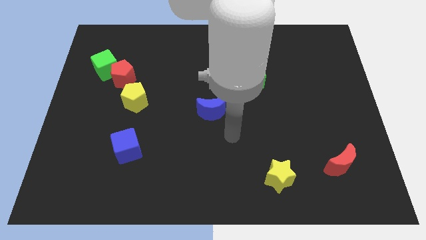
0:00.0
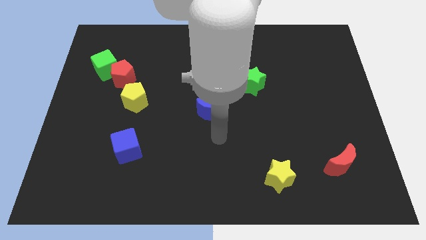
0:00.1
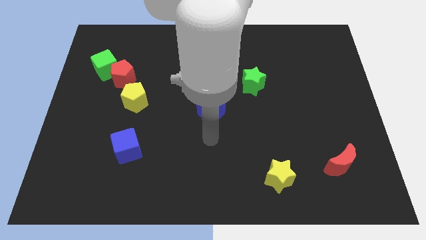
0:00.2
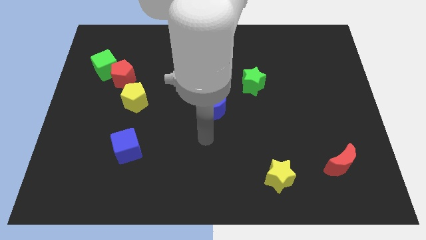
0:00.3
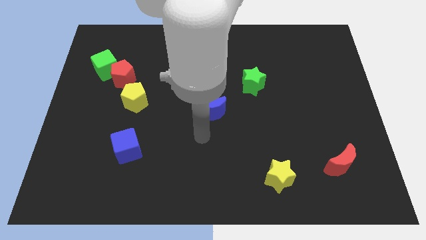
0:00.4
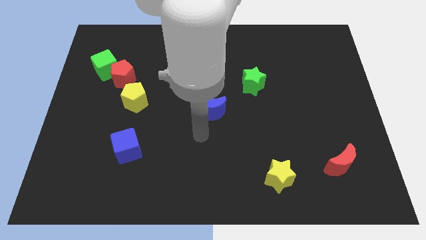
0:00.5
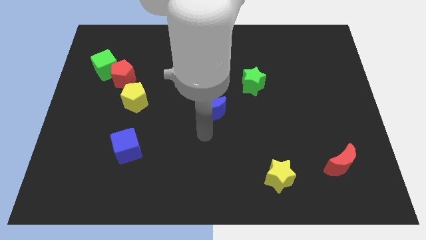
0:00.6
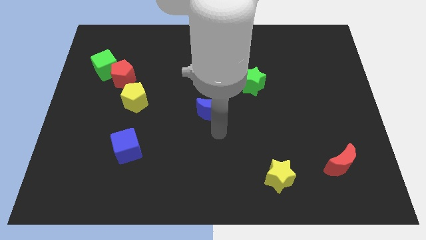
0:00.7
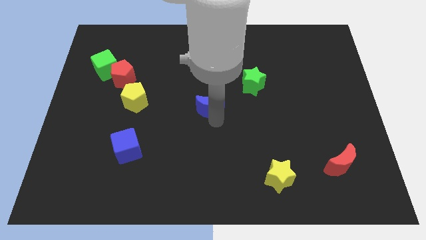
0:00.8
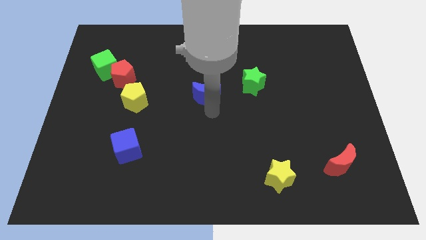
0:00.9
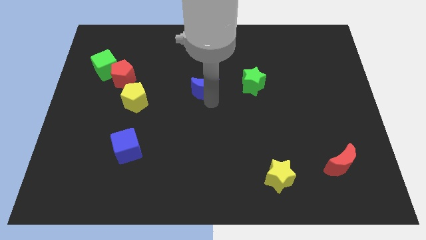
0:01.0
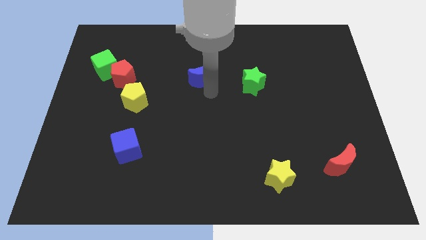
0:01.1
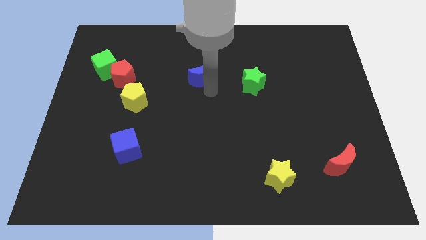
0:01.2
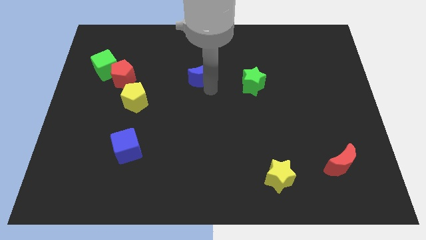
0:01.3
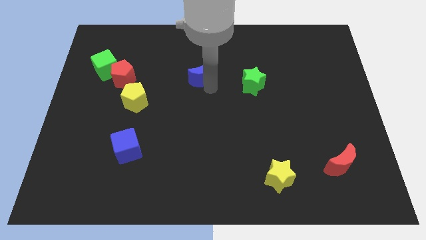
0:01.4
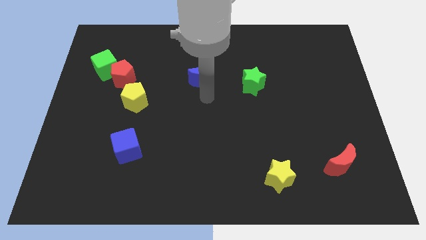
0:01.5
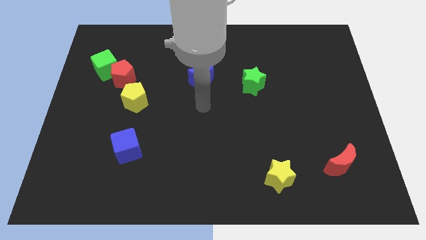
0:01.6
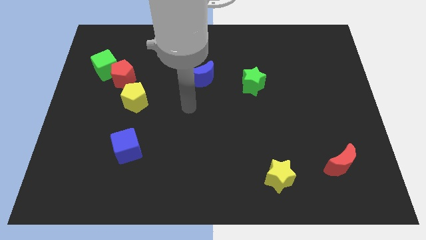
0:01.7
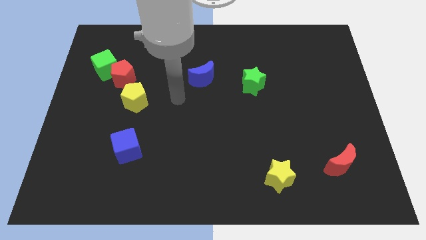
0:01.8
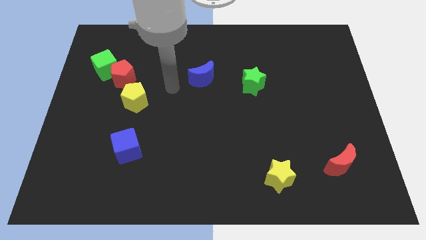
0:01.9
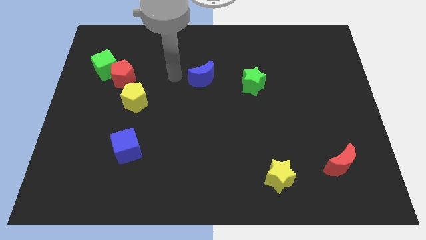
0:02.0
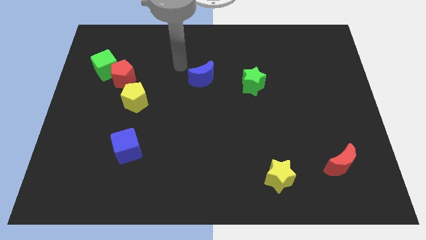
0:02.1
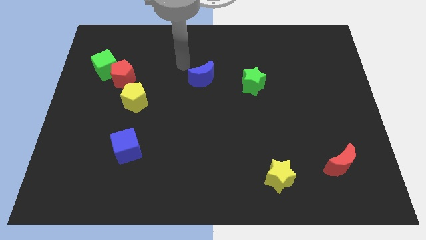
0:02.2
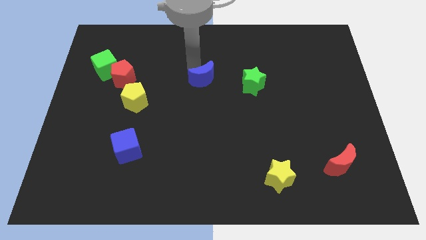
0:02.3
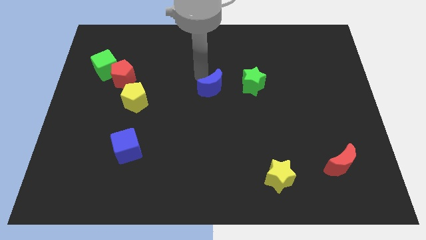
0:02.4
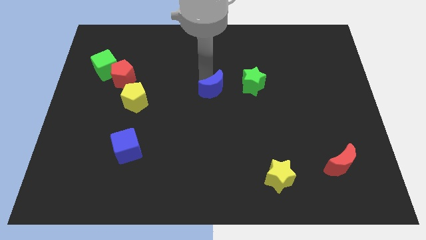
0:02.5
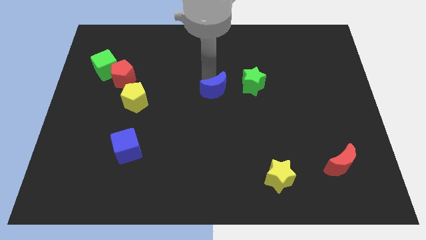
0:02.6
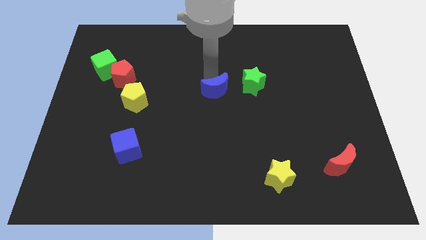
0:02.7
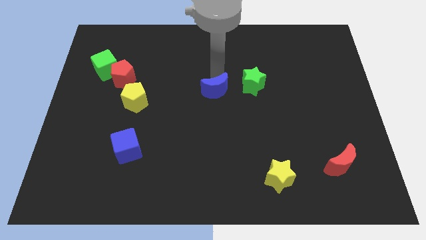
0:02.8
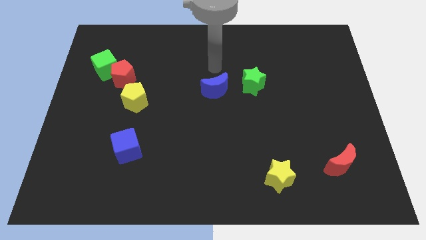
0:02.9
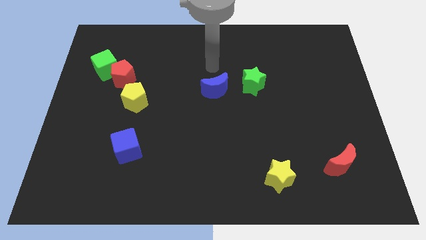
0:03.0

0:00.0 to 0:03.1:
slide the blue crescent to the left side of the green star

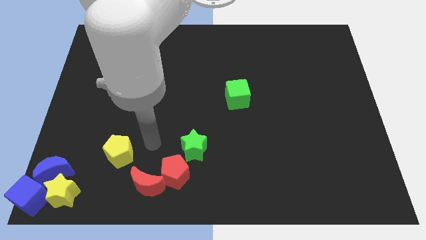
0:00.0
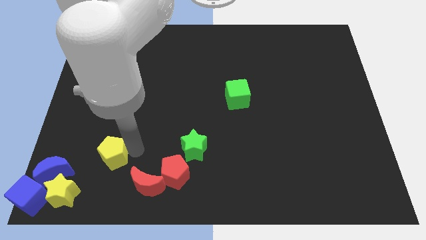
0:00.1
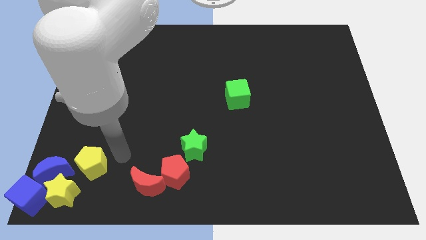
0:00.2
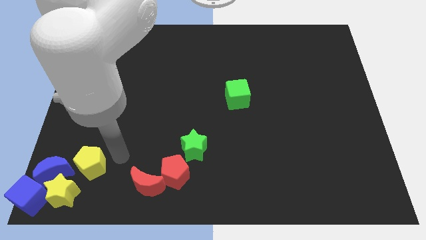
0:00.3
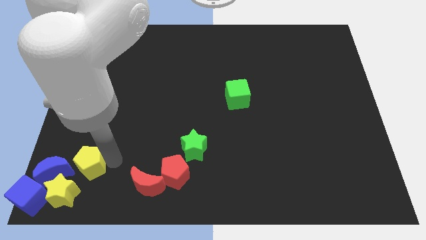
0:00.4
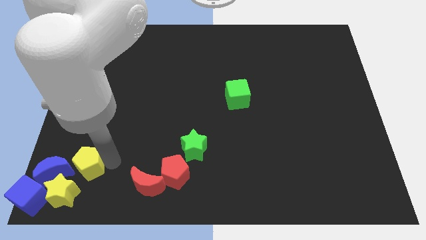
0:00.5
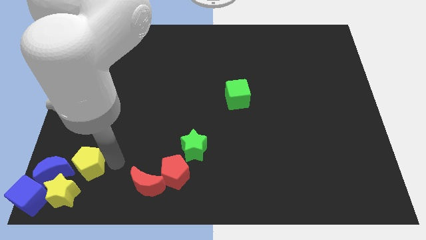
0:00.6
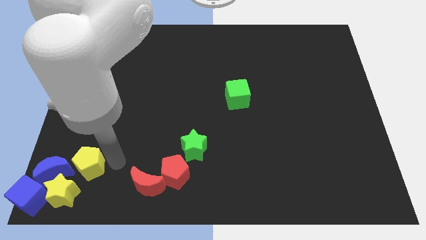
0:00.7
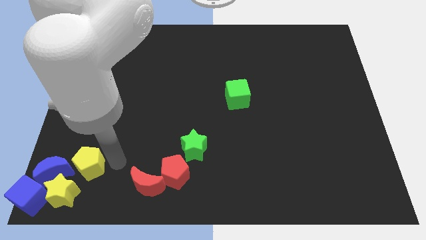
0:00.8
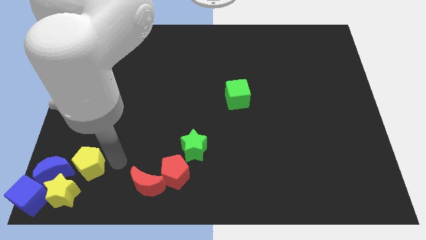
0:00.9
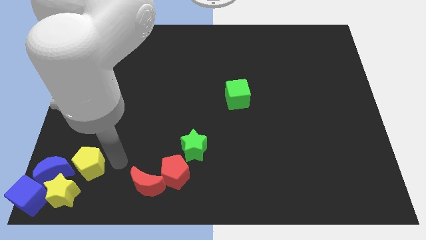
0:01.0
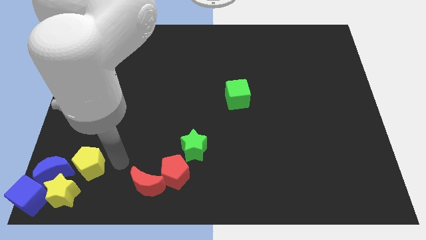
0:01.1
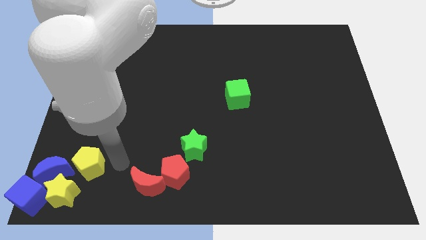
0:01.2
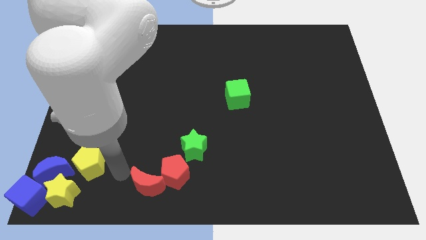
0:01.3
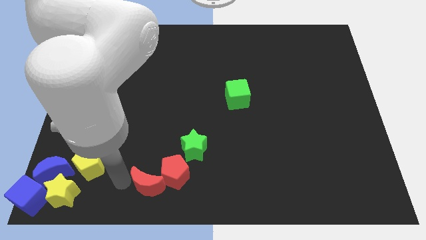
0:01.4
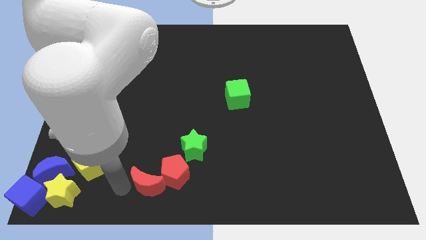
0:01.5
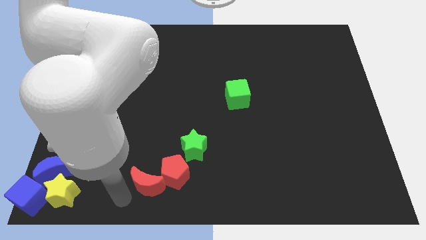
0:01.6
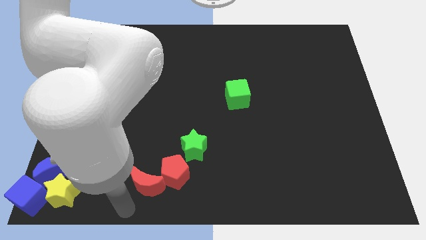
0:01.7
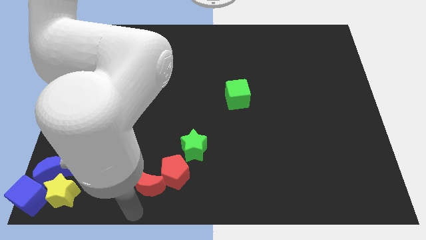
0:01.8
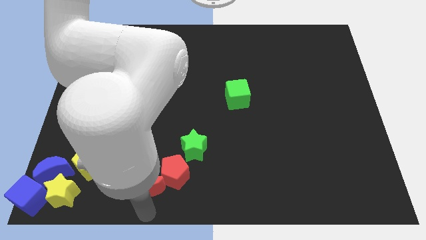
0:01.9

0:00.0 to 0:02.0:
push the yellow pentagon towards the bottom left

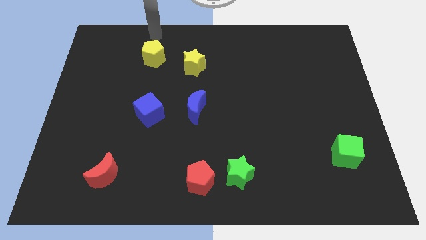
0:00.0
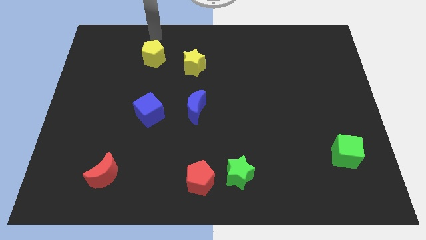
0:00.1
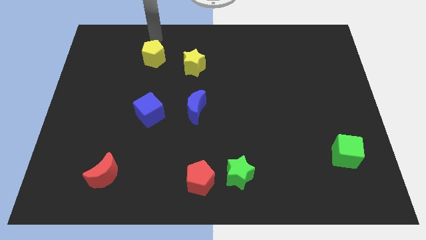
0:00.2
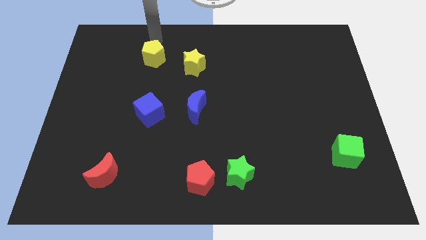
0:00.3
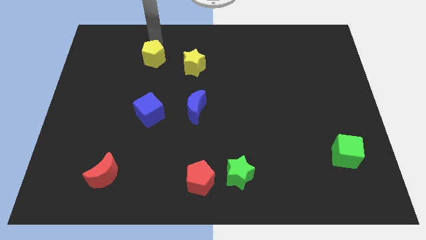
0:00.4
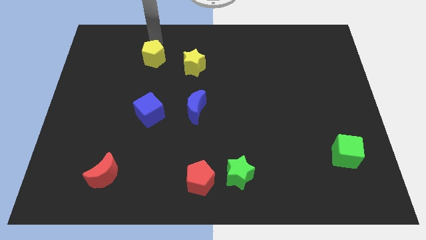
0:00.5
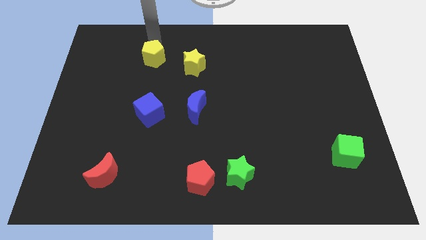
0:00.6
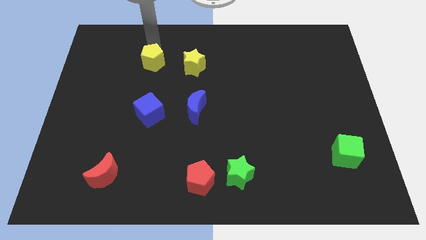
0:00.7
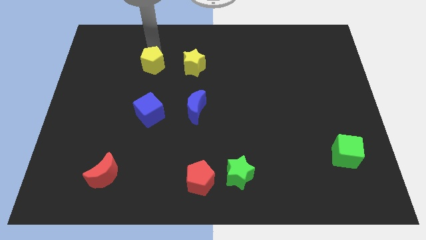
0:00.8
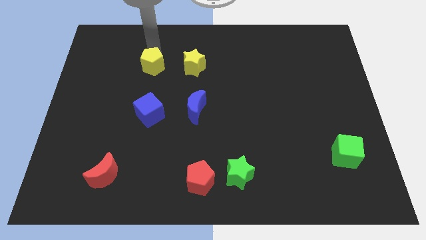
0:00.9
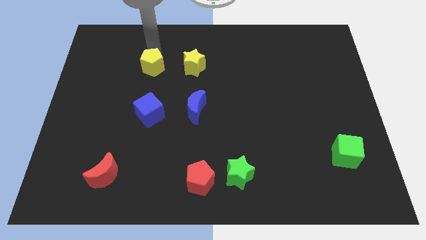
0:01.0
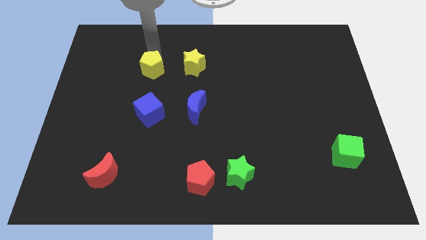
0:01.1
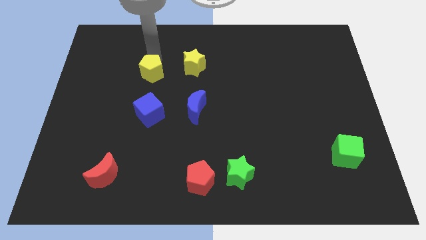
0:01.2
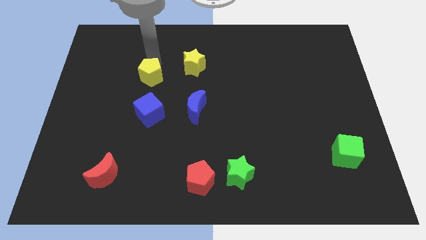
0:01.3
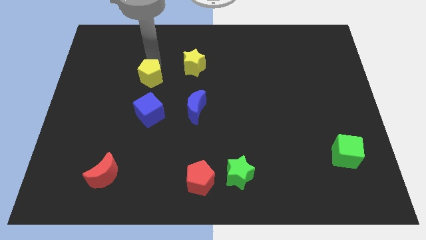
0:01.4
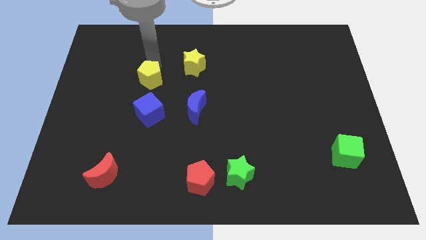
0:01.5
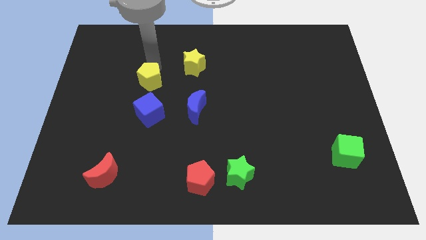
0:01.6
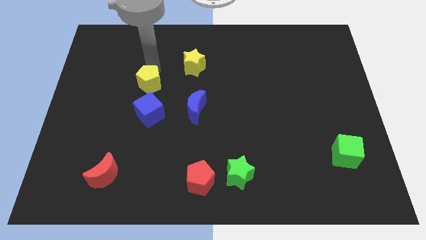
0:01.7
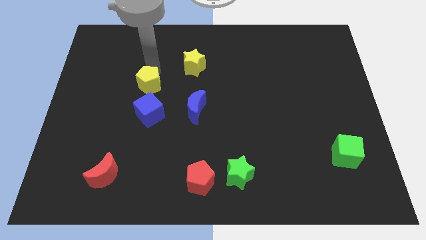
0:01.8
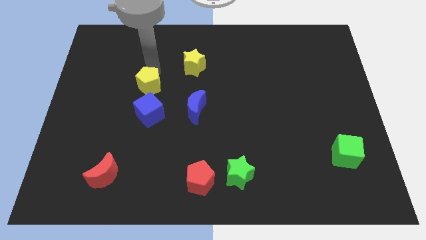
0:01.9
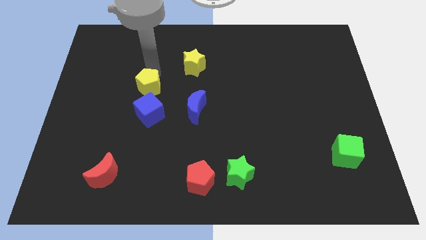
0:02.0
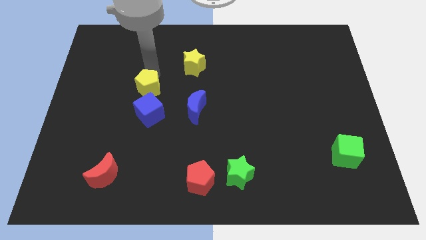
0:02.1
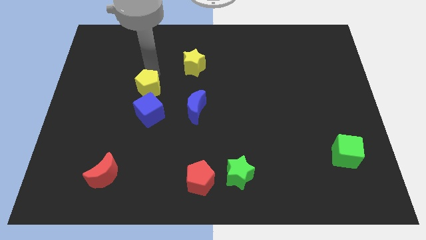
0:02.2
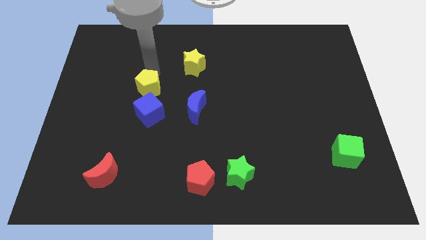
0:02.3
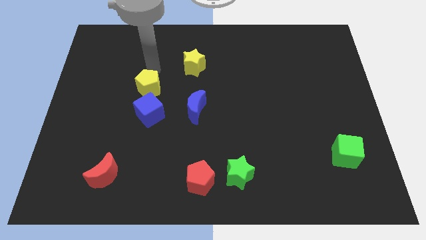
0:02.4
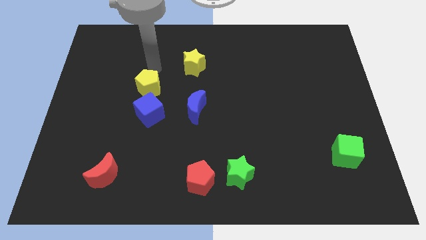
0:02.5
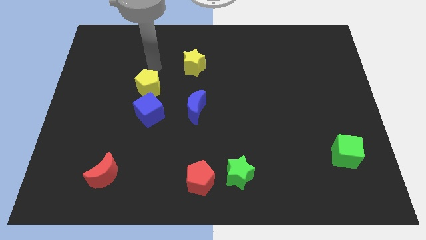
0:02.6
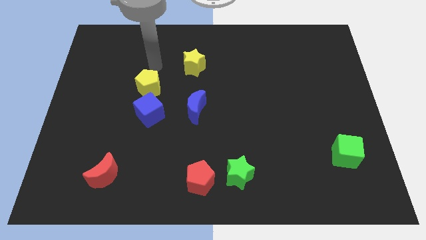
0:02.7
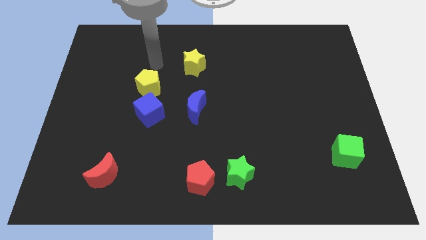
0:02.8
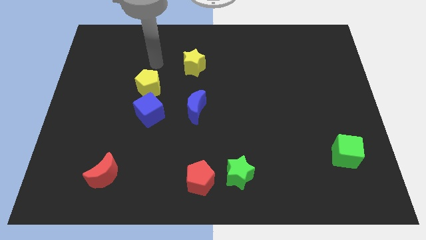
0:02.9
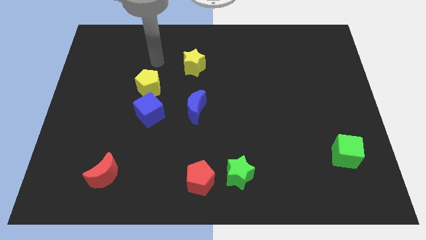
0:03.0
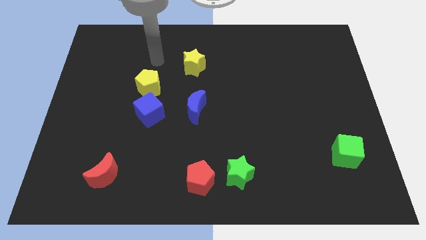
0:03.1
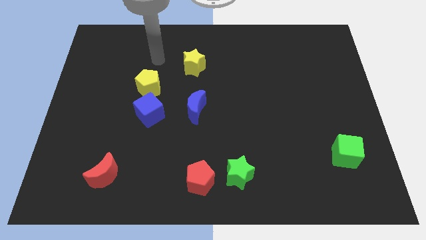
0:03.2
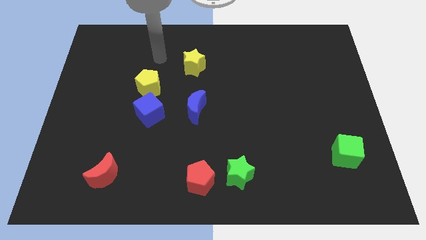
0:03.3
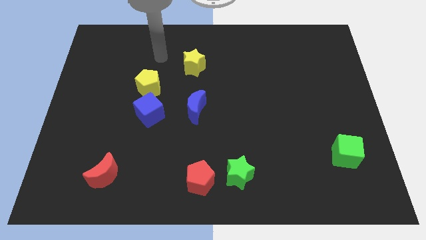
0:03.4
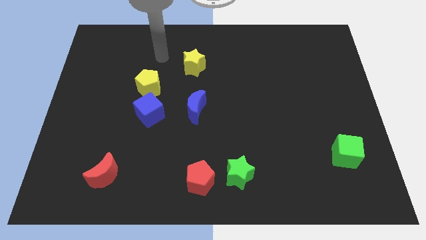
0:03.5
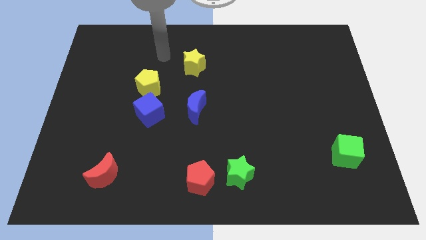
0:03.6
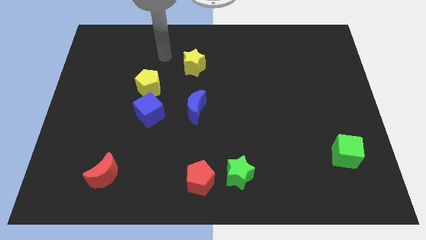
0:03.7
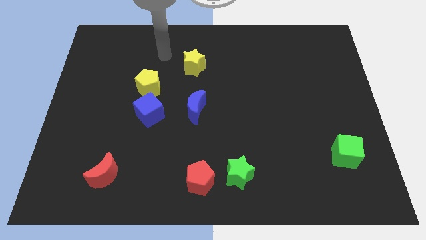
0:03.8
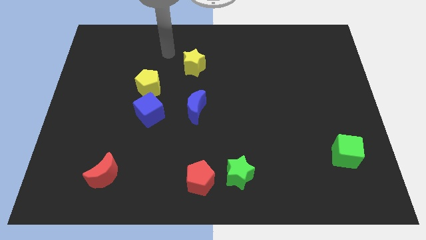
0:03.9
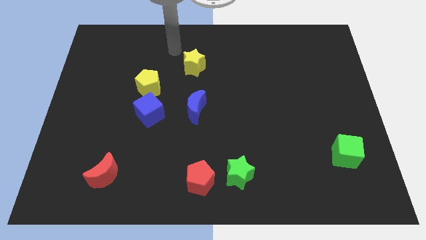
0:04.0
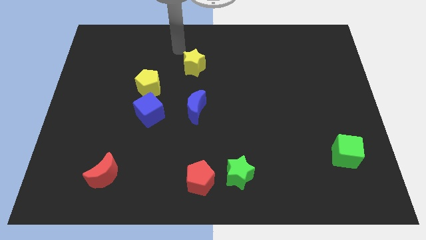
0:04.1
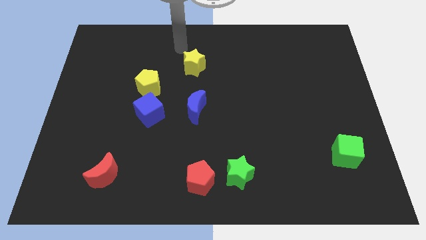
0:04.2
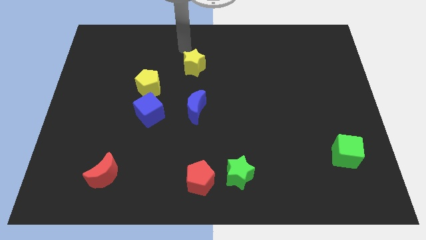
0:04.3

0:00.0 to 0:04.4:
place yellow pentagon above blue cube
